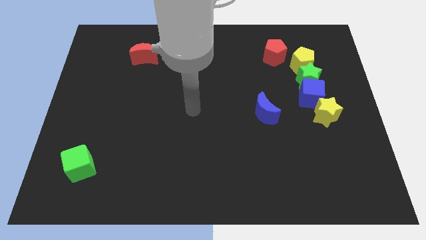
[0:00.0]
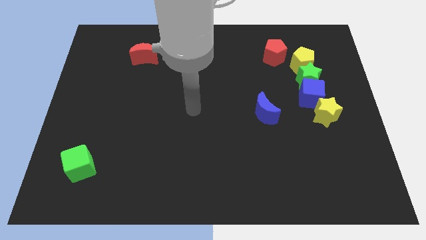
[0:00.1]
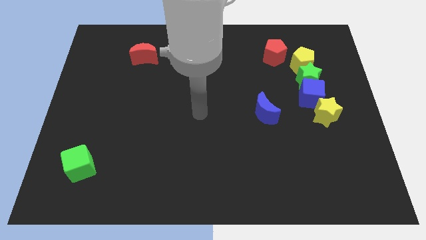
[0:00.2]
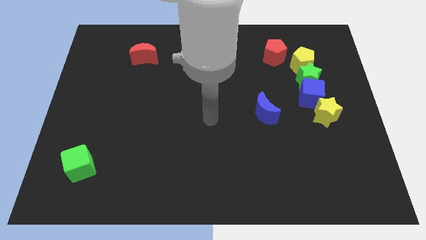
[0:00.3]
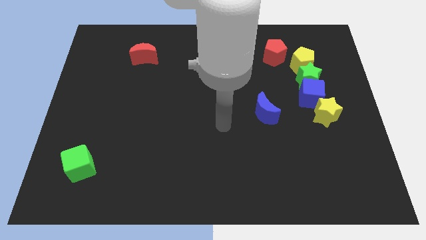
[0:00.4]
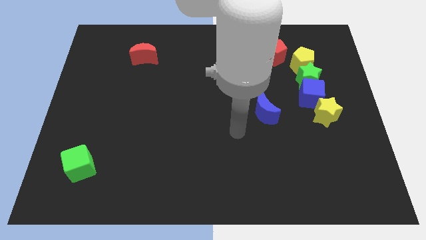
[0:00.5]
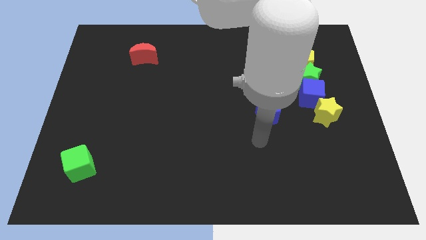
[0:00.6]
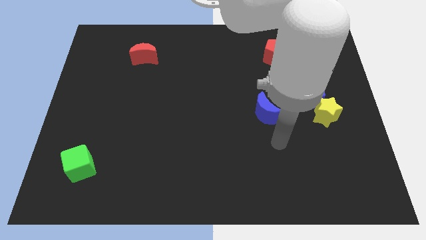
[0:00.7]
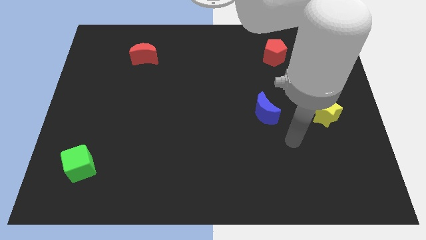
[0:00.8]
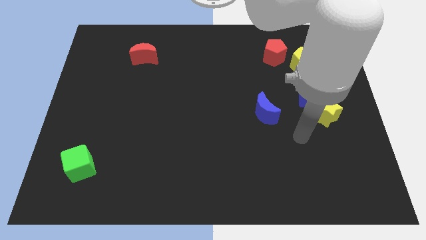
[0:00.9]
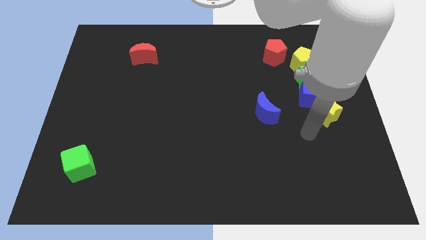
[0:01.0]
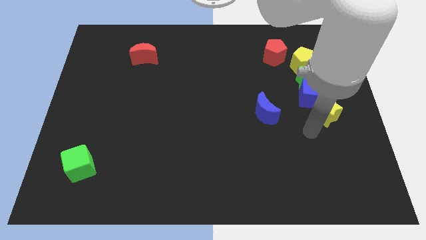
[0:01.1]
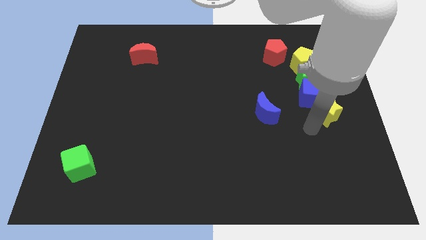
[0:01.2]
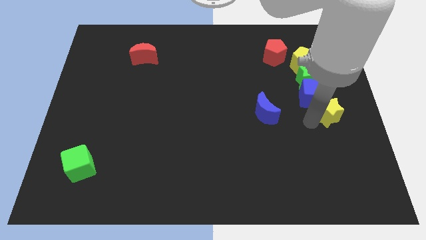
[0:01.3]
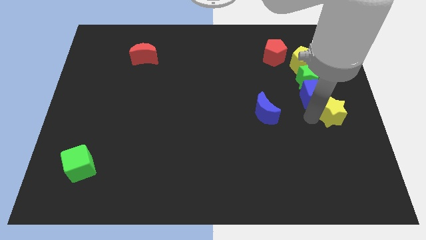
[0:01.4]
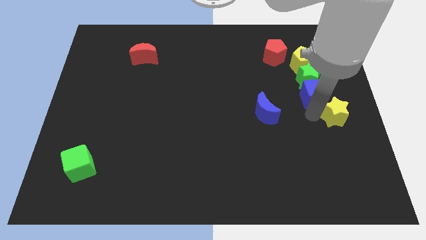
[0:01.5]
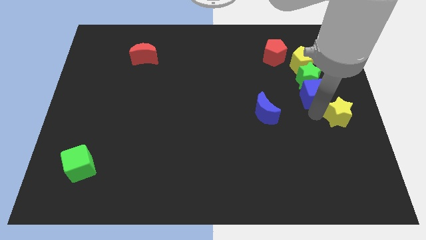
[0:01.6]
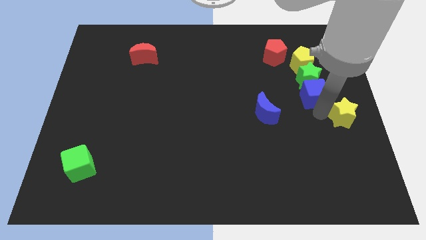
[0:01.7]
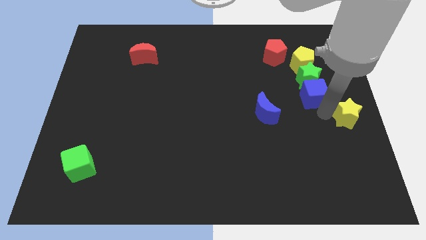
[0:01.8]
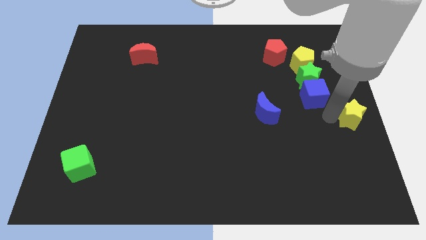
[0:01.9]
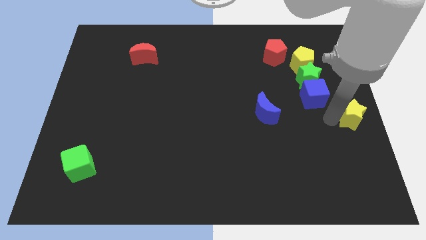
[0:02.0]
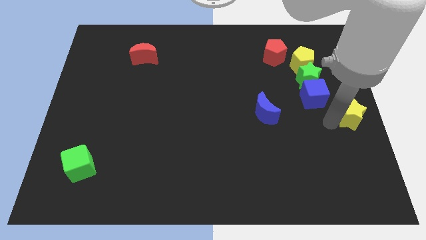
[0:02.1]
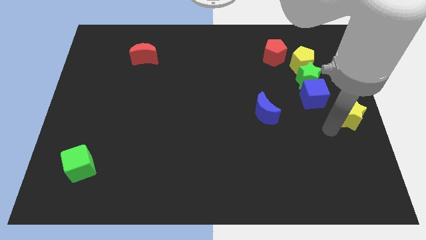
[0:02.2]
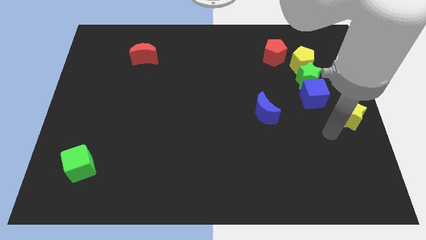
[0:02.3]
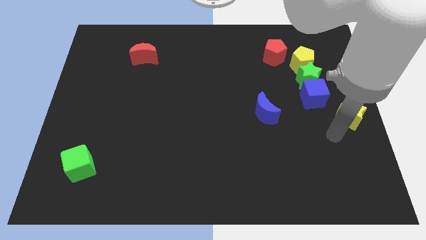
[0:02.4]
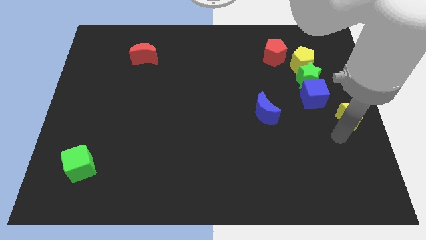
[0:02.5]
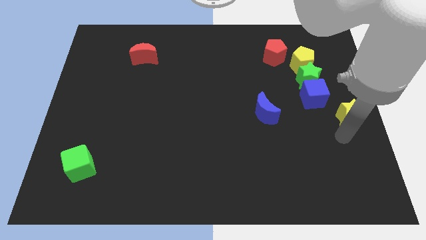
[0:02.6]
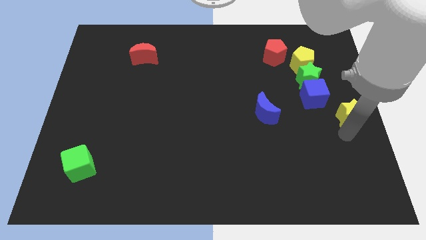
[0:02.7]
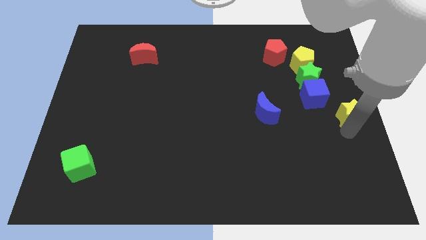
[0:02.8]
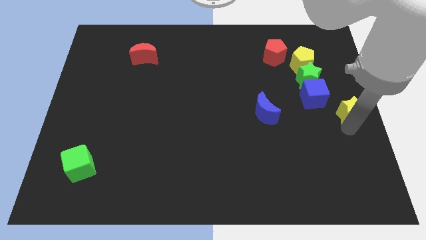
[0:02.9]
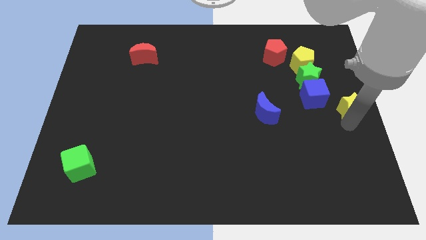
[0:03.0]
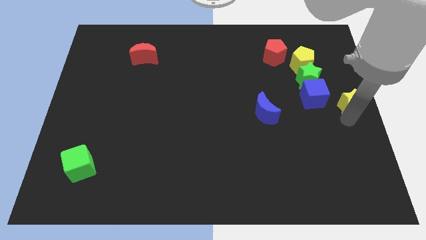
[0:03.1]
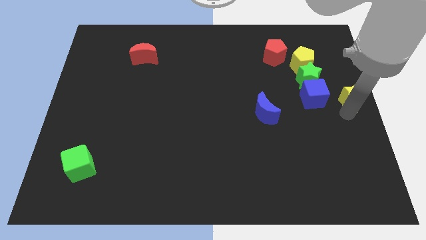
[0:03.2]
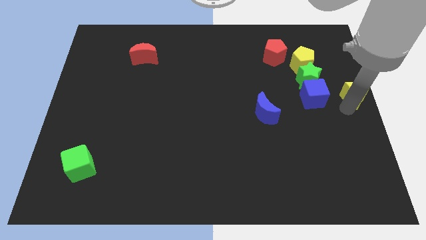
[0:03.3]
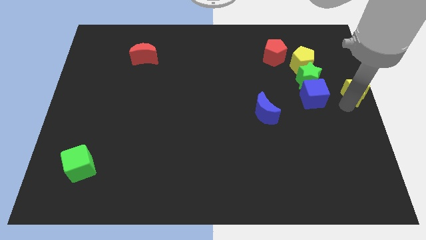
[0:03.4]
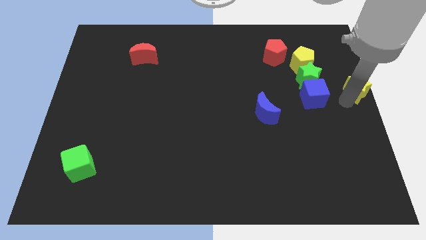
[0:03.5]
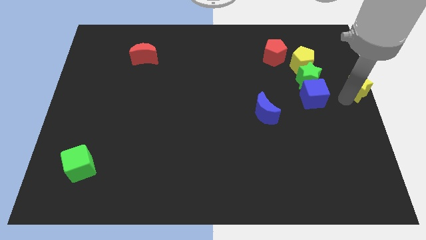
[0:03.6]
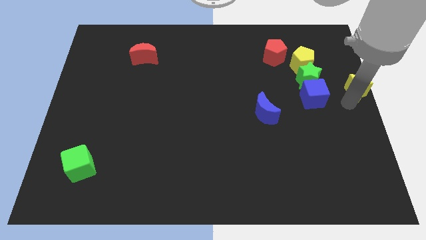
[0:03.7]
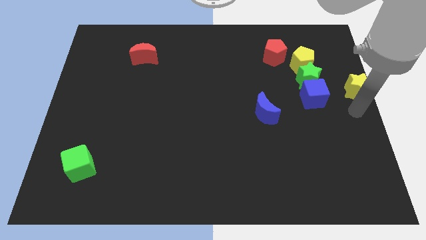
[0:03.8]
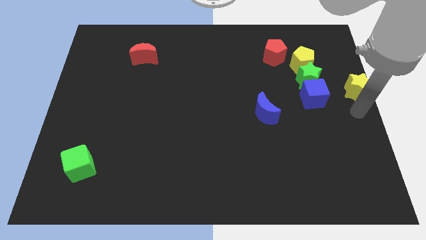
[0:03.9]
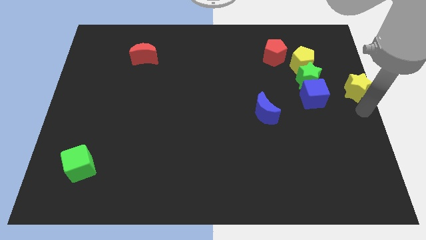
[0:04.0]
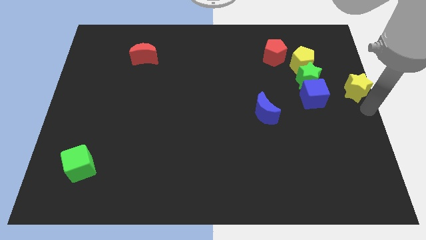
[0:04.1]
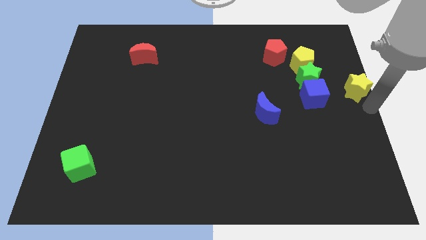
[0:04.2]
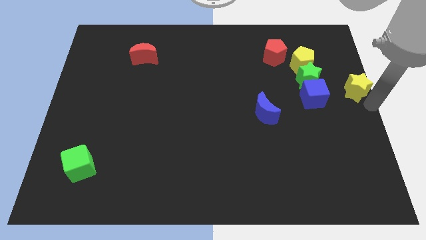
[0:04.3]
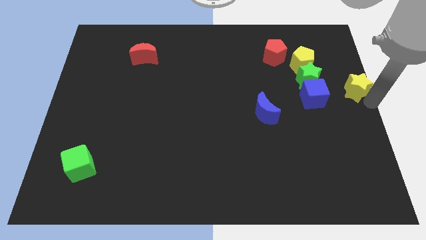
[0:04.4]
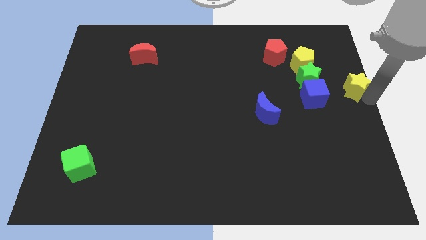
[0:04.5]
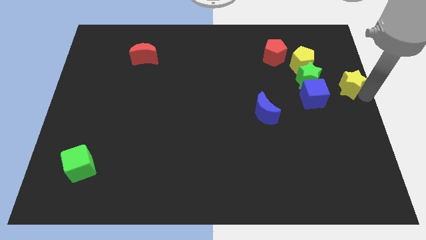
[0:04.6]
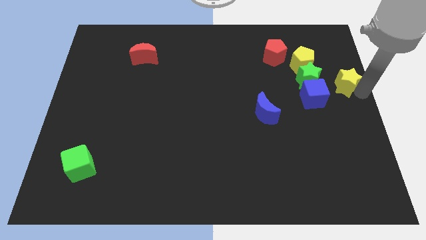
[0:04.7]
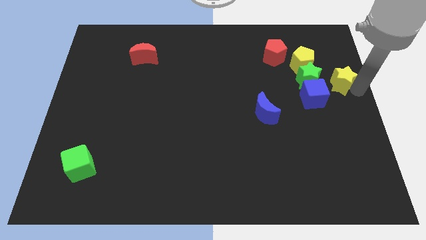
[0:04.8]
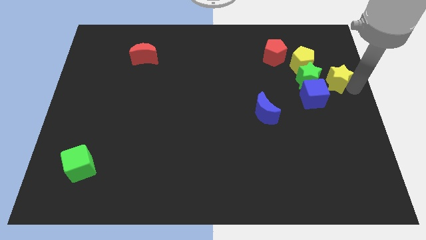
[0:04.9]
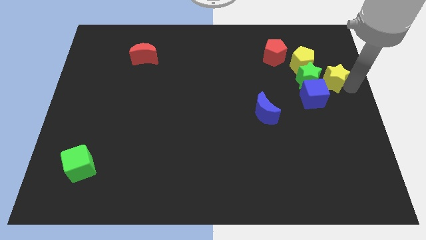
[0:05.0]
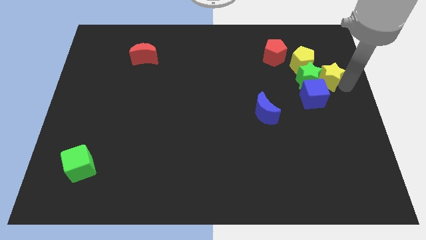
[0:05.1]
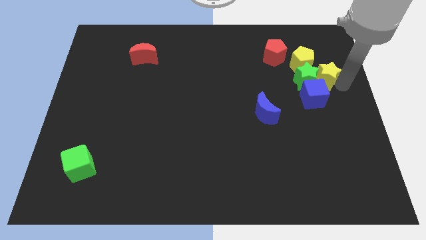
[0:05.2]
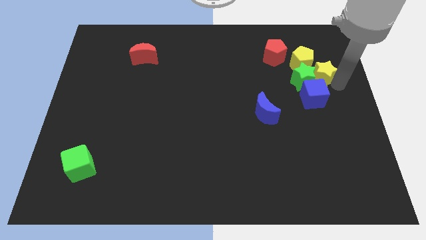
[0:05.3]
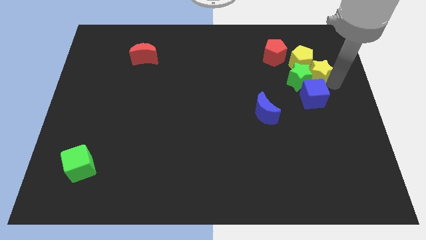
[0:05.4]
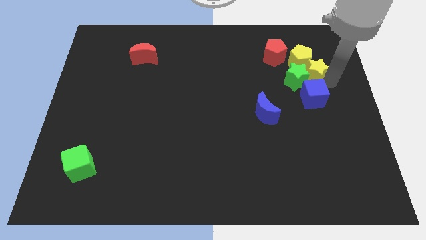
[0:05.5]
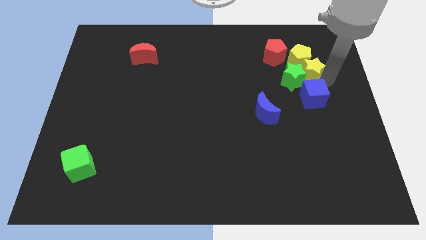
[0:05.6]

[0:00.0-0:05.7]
move the yellow star close to the yellow pentagon

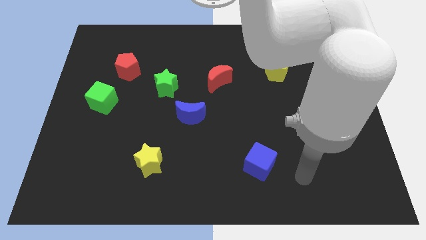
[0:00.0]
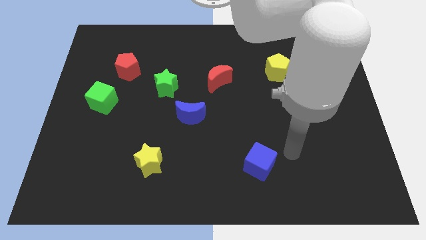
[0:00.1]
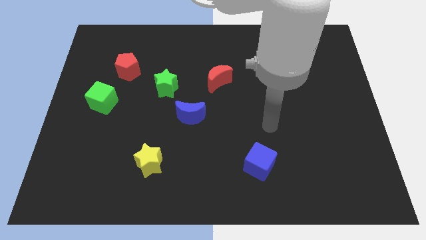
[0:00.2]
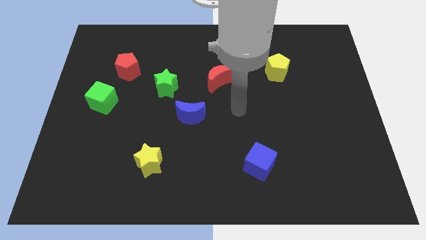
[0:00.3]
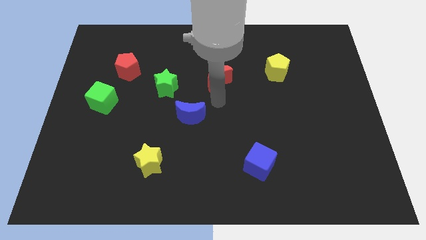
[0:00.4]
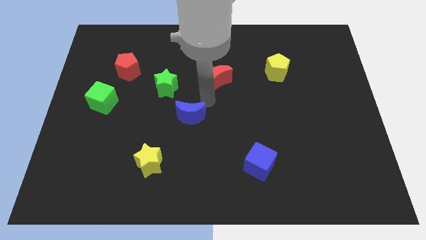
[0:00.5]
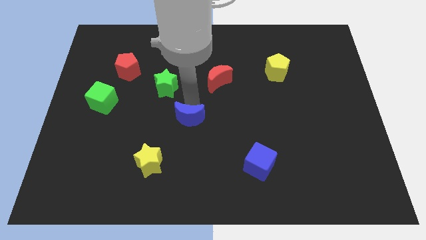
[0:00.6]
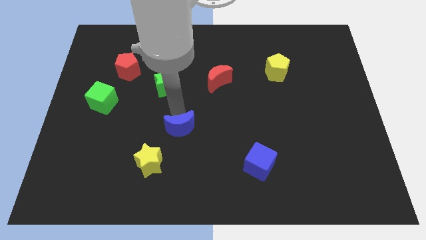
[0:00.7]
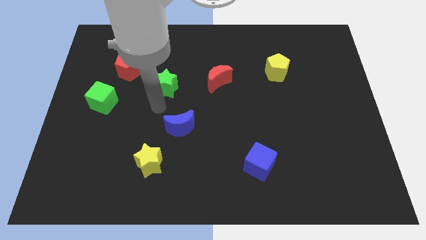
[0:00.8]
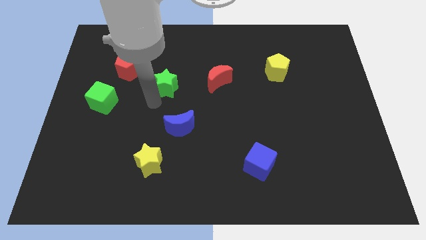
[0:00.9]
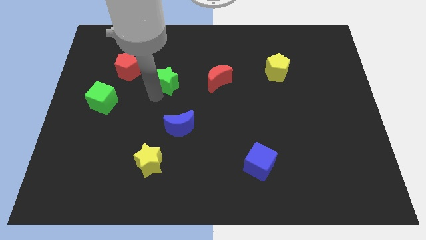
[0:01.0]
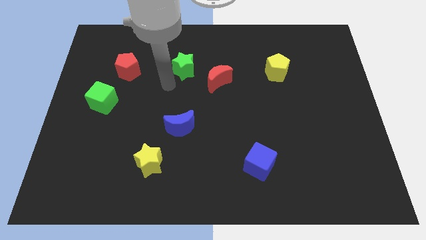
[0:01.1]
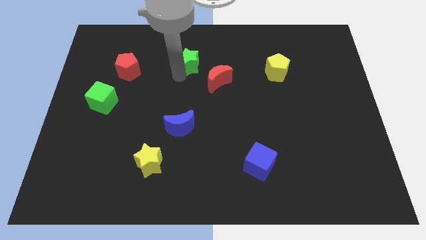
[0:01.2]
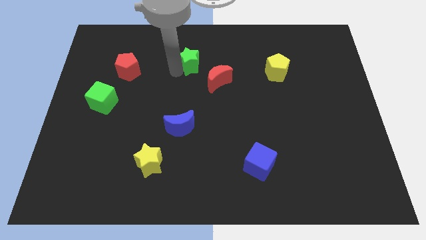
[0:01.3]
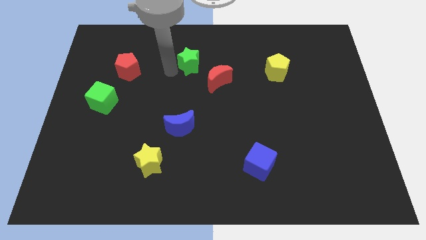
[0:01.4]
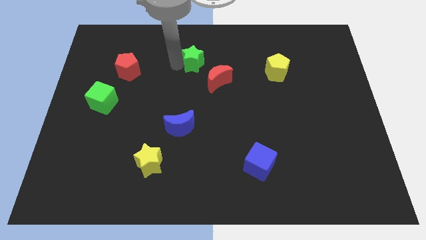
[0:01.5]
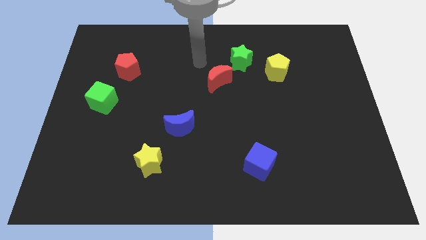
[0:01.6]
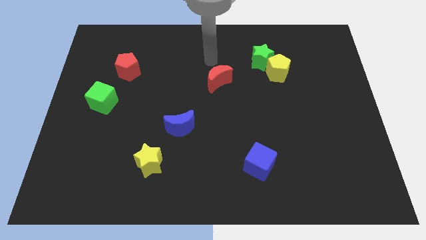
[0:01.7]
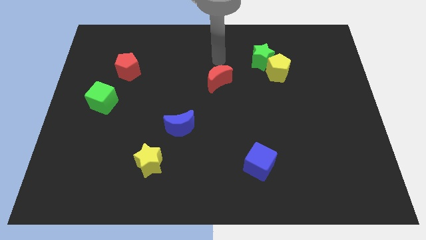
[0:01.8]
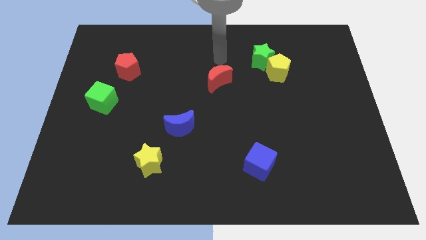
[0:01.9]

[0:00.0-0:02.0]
move the green star towards the yellow pentagon
